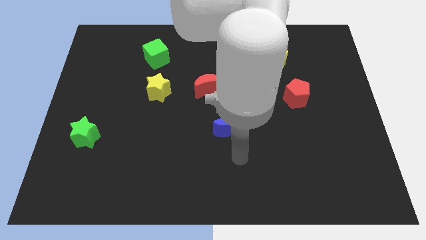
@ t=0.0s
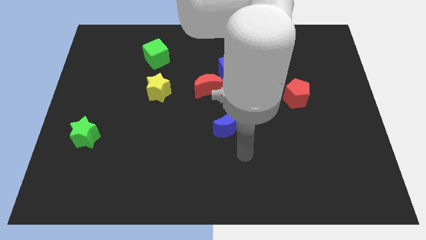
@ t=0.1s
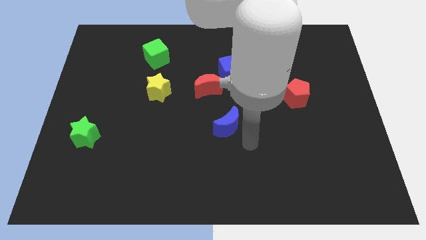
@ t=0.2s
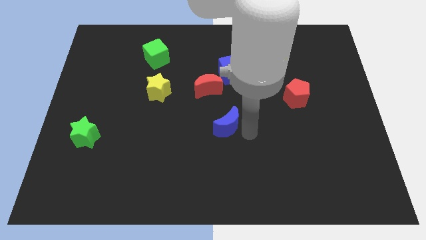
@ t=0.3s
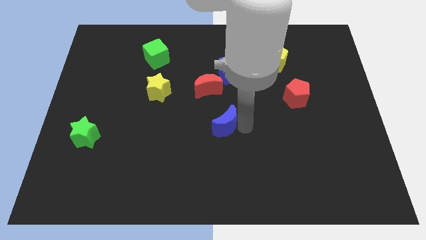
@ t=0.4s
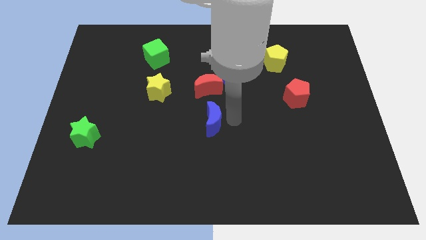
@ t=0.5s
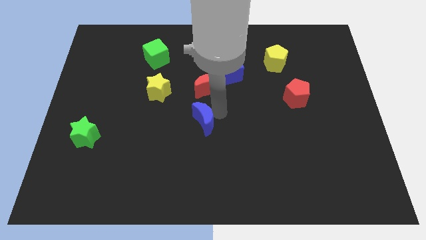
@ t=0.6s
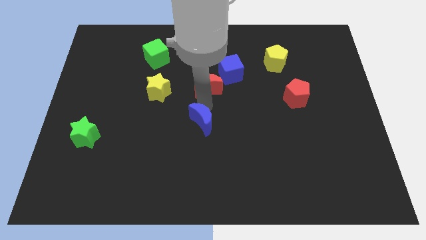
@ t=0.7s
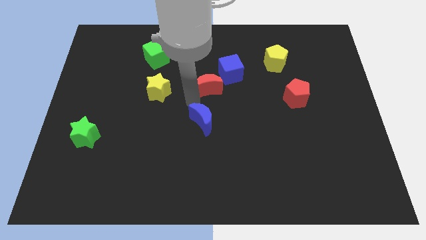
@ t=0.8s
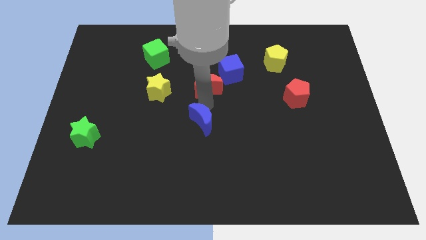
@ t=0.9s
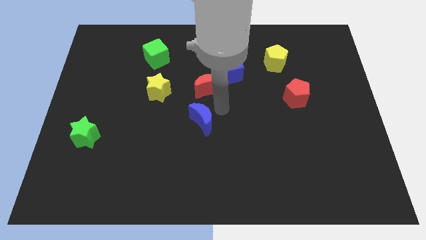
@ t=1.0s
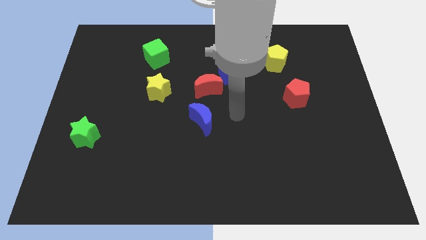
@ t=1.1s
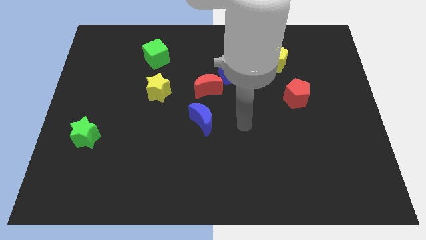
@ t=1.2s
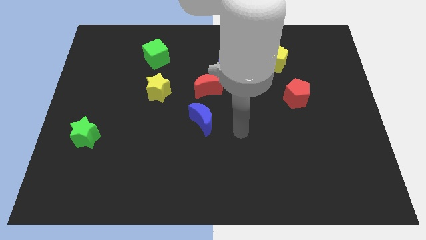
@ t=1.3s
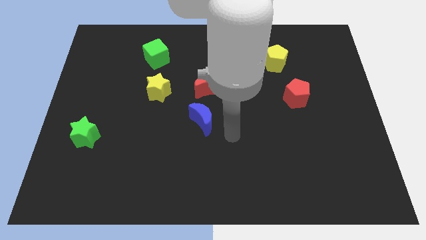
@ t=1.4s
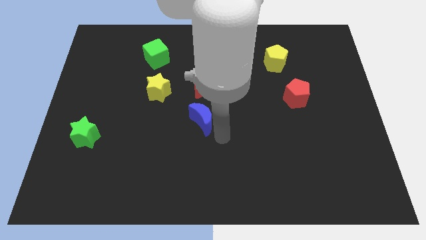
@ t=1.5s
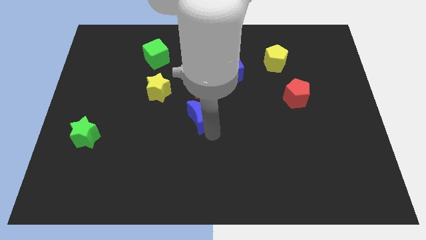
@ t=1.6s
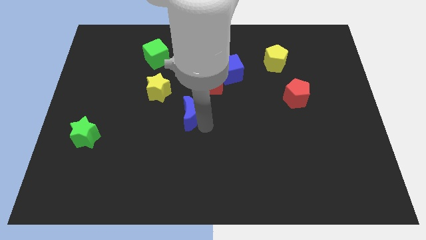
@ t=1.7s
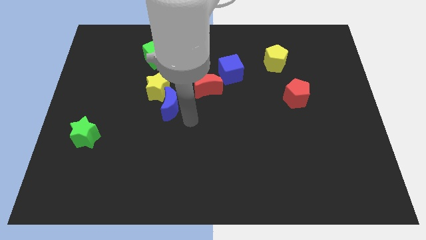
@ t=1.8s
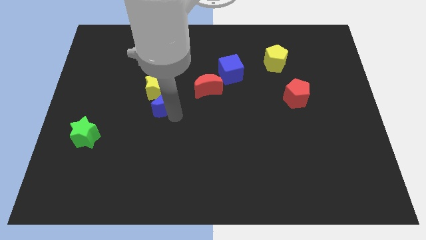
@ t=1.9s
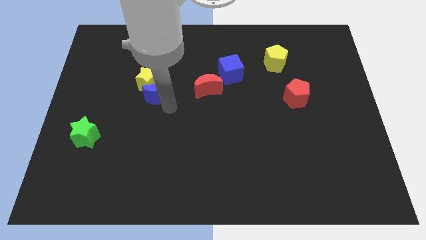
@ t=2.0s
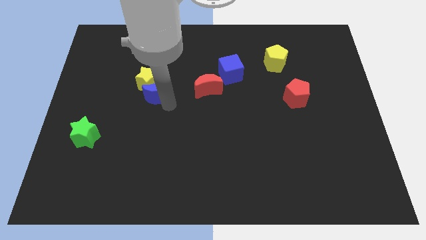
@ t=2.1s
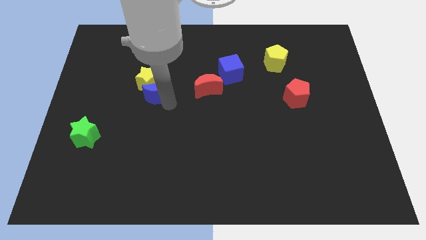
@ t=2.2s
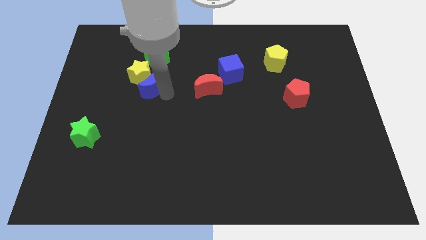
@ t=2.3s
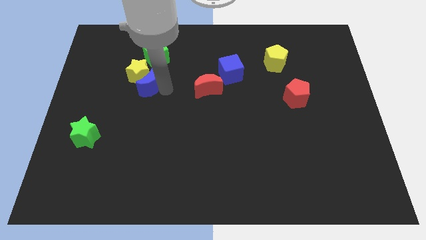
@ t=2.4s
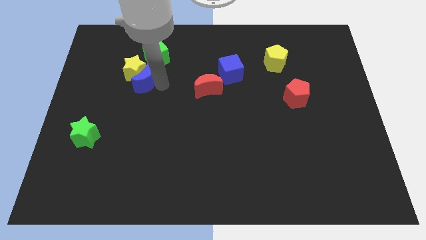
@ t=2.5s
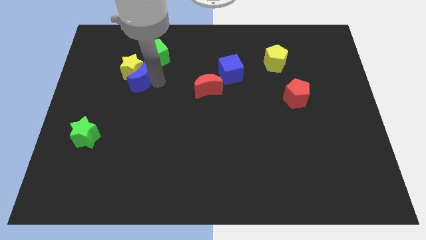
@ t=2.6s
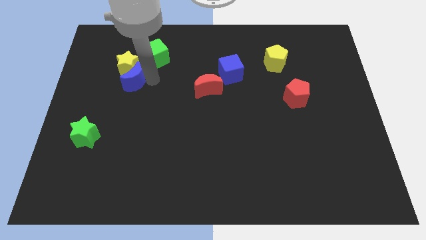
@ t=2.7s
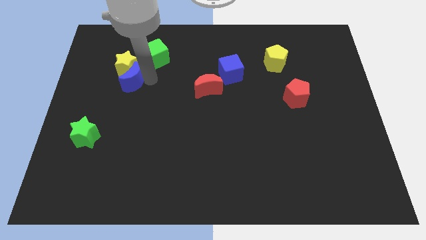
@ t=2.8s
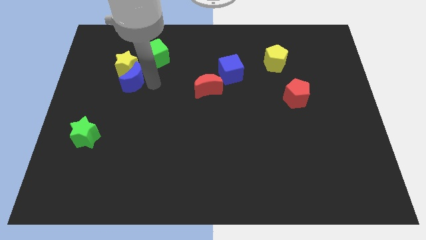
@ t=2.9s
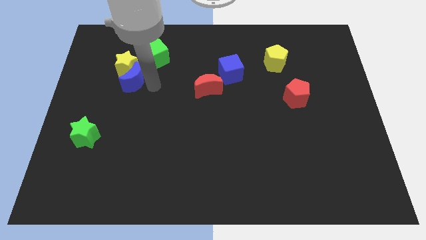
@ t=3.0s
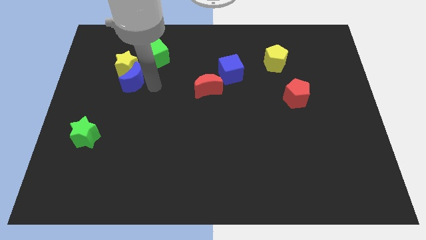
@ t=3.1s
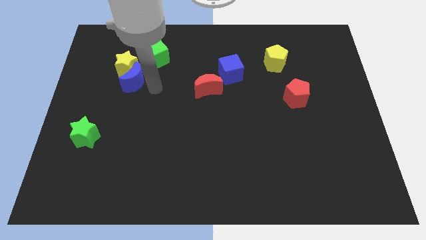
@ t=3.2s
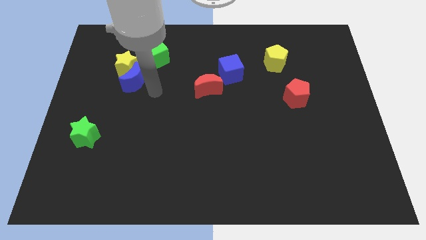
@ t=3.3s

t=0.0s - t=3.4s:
drag the blue moon into yellow star

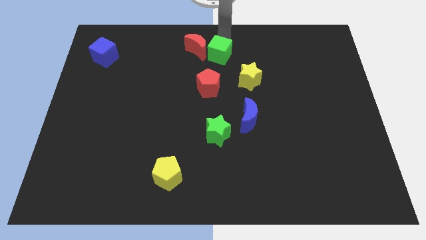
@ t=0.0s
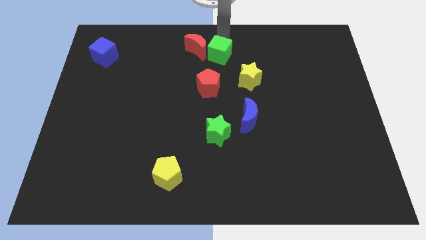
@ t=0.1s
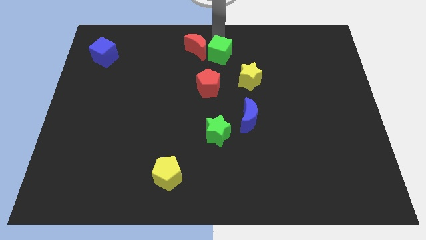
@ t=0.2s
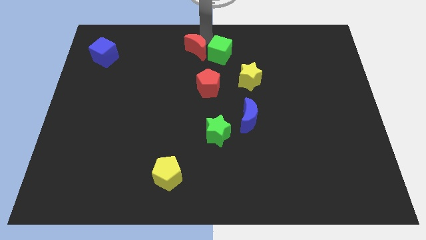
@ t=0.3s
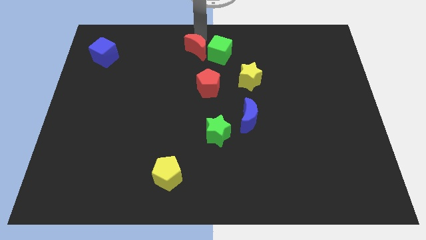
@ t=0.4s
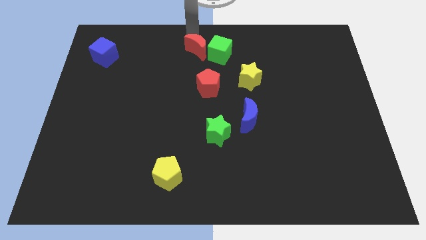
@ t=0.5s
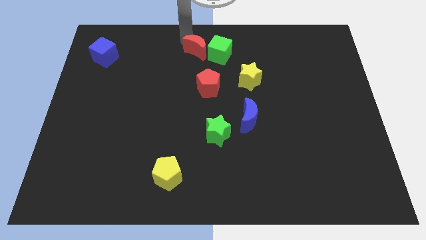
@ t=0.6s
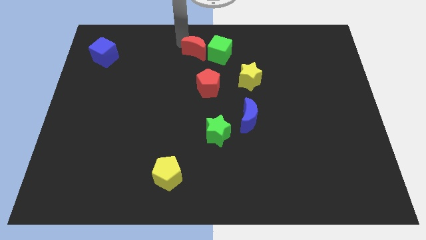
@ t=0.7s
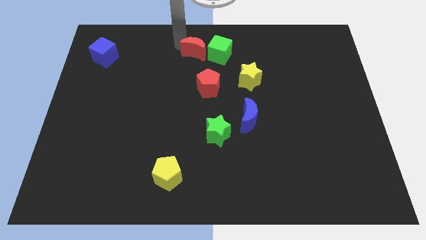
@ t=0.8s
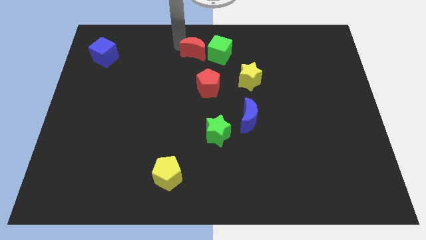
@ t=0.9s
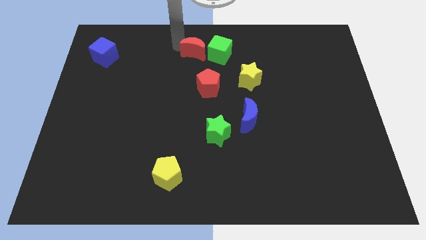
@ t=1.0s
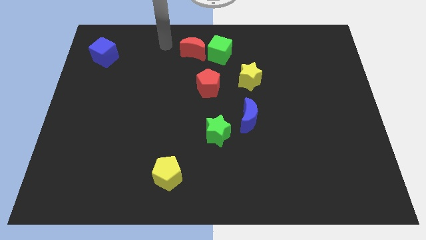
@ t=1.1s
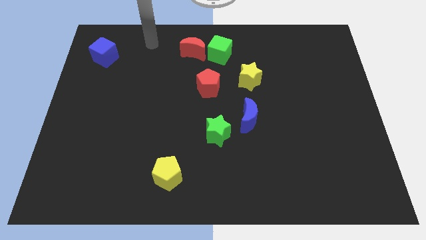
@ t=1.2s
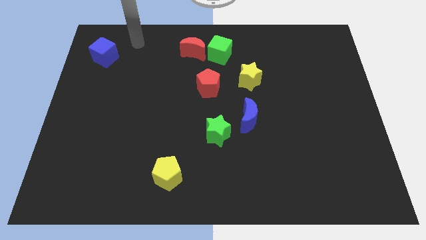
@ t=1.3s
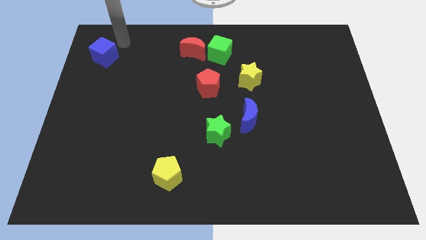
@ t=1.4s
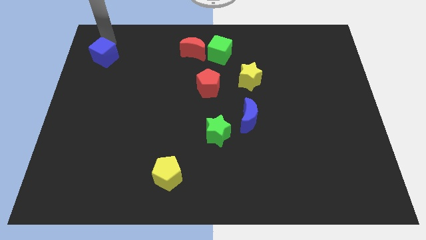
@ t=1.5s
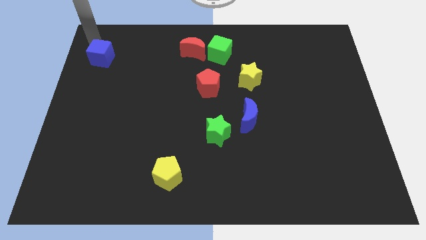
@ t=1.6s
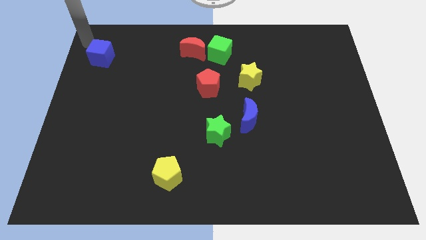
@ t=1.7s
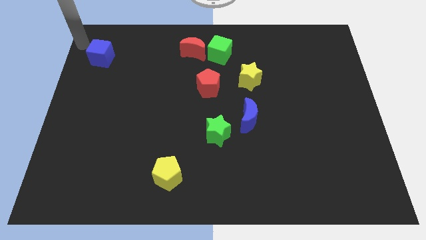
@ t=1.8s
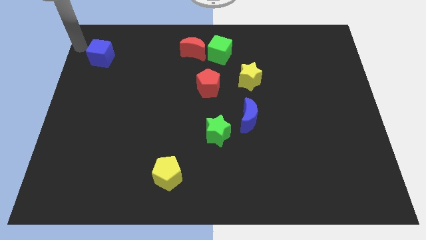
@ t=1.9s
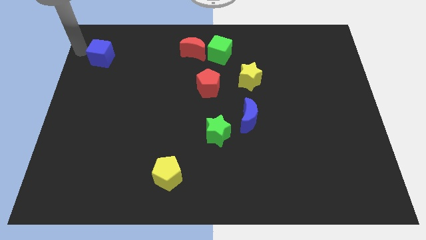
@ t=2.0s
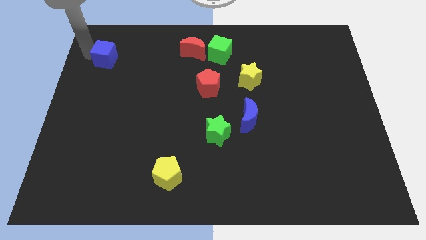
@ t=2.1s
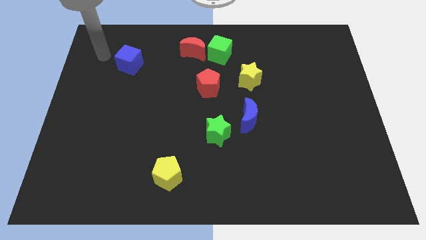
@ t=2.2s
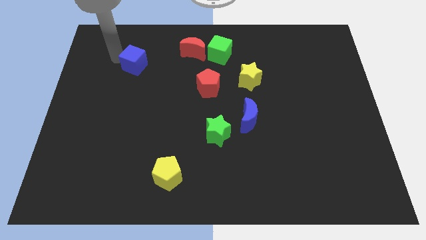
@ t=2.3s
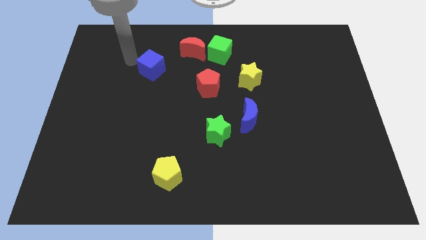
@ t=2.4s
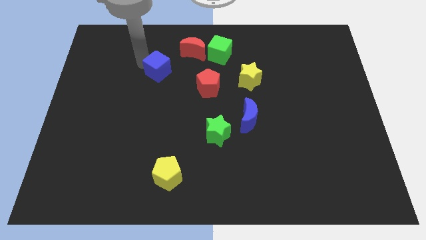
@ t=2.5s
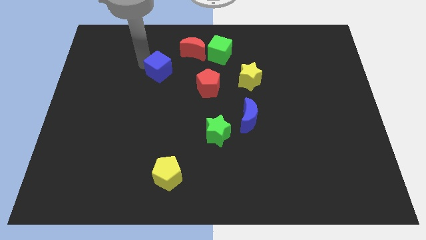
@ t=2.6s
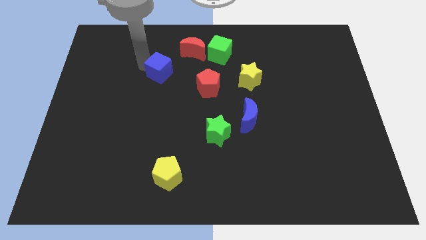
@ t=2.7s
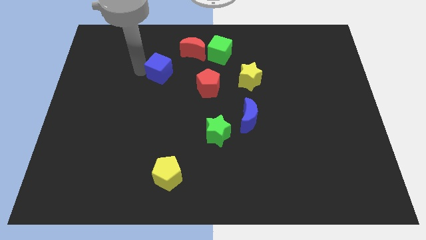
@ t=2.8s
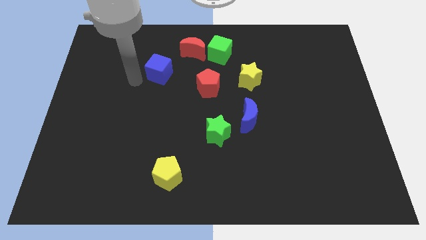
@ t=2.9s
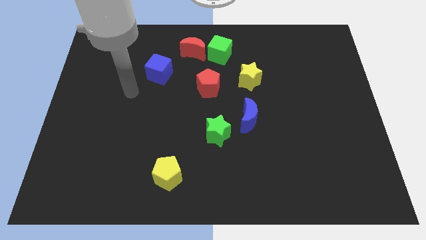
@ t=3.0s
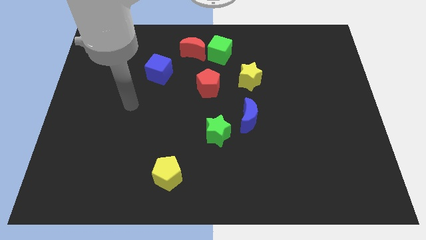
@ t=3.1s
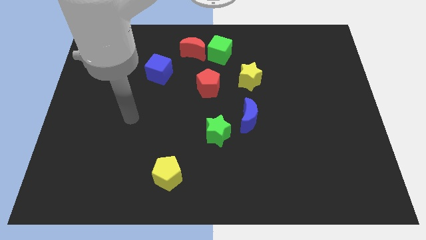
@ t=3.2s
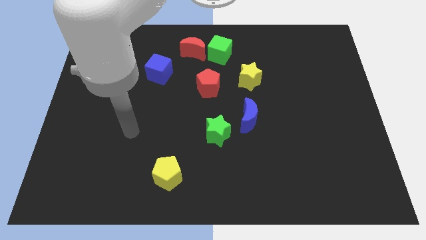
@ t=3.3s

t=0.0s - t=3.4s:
slide the blue cube towards the bottom right

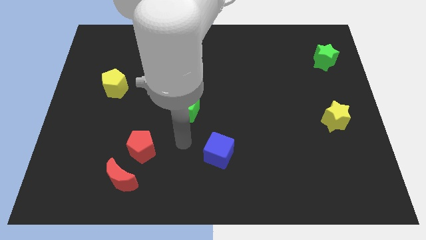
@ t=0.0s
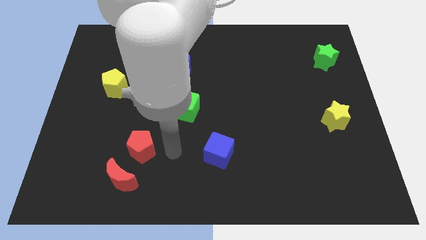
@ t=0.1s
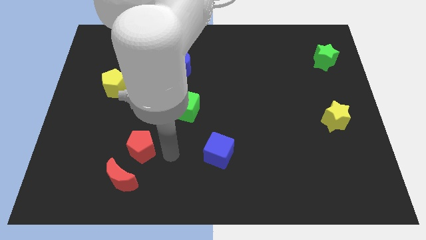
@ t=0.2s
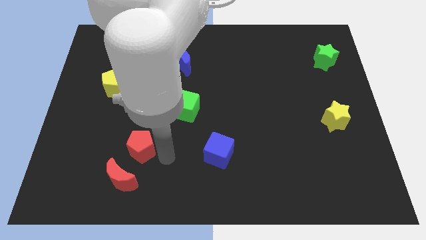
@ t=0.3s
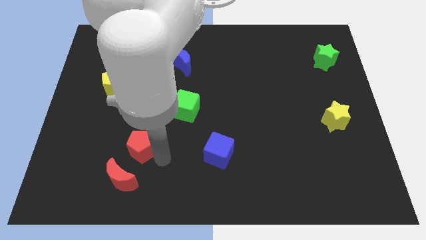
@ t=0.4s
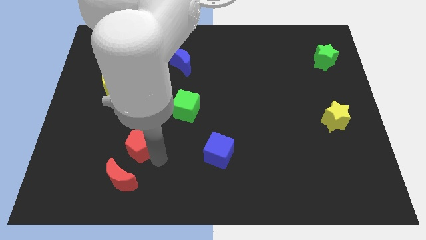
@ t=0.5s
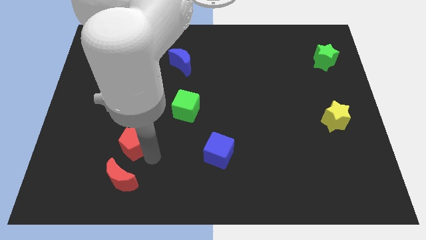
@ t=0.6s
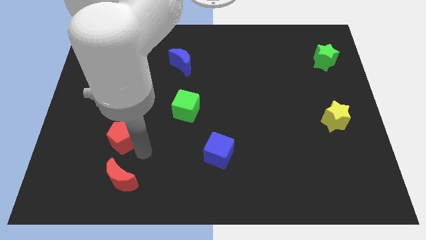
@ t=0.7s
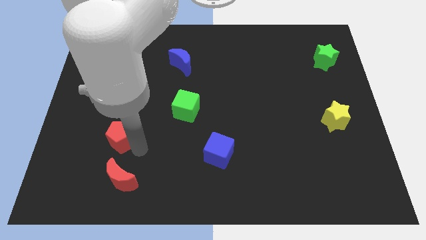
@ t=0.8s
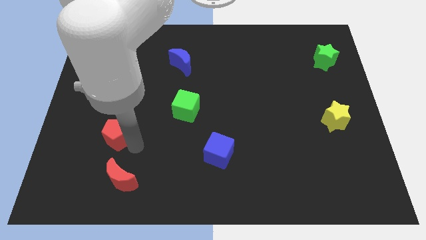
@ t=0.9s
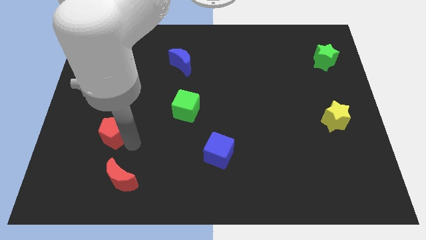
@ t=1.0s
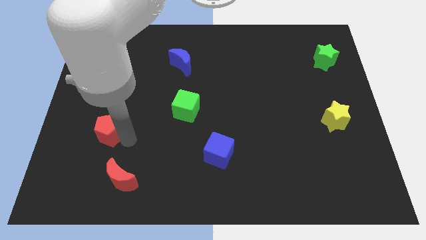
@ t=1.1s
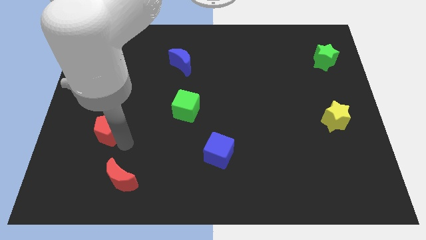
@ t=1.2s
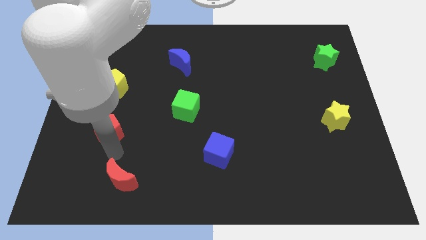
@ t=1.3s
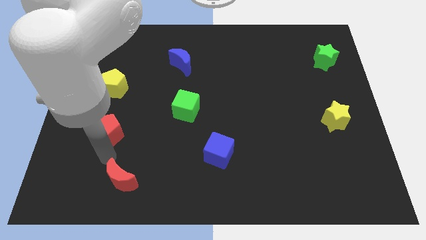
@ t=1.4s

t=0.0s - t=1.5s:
place the red pentagon down to the yellow pentagon

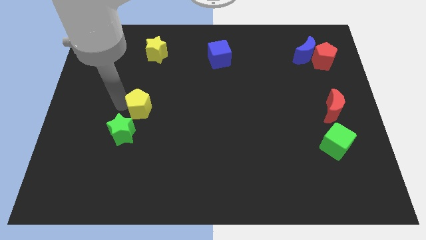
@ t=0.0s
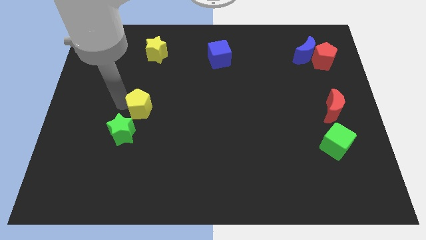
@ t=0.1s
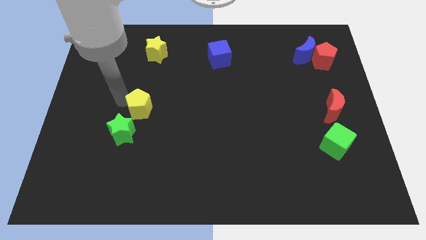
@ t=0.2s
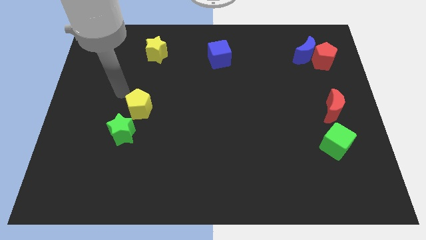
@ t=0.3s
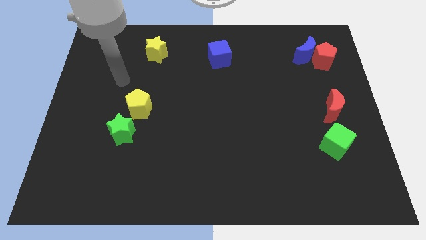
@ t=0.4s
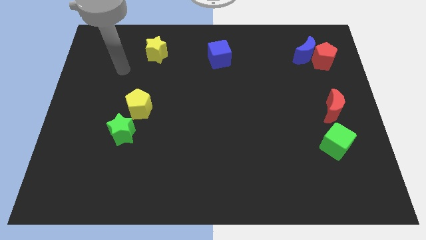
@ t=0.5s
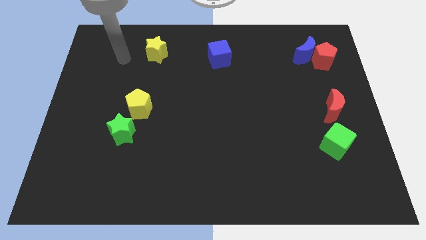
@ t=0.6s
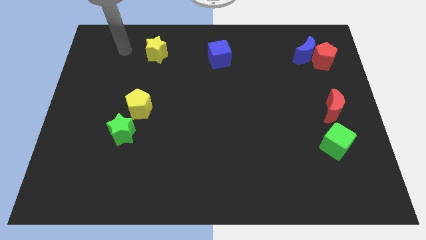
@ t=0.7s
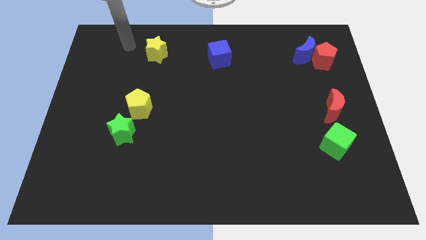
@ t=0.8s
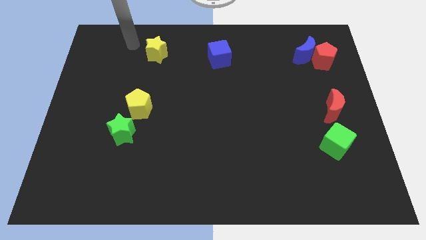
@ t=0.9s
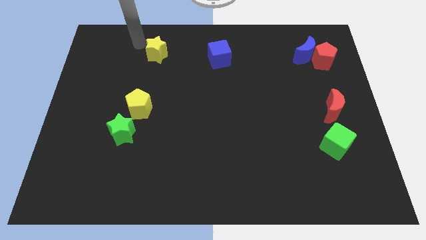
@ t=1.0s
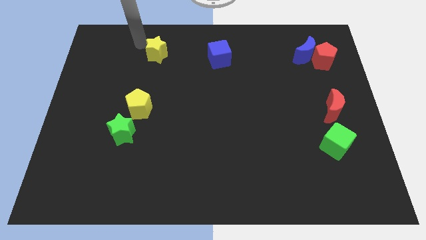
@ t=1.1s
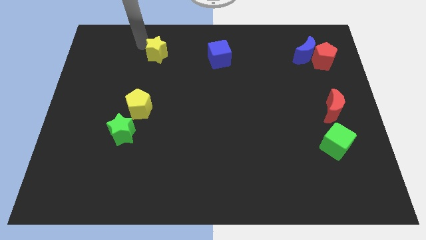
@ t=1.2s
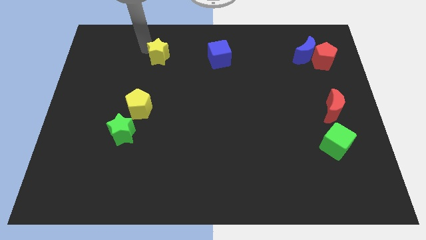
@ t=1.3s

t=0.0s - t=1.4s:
tap the yellow star
